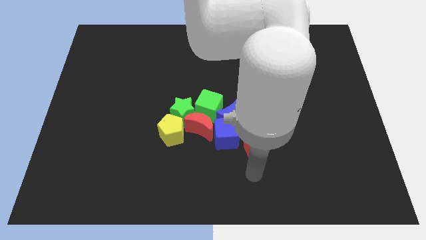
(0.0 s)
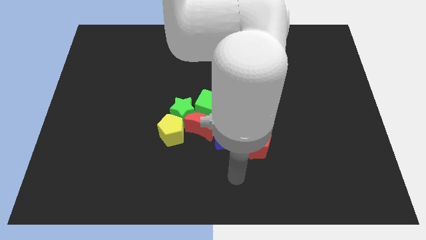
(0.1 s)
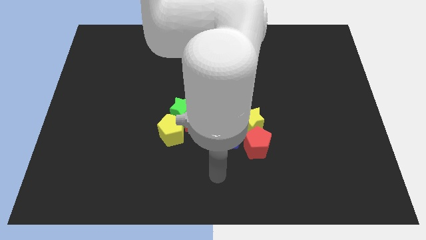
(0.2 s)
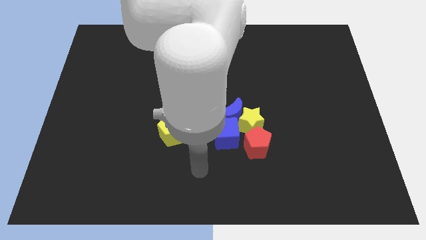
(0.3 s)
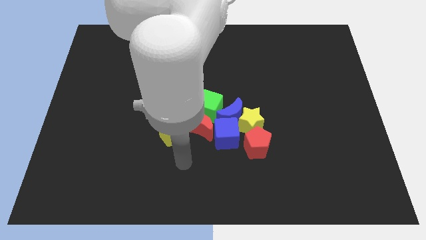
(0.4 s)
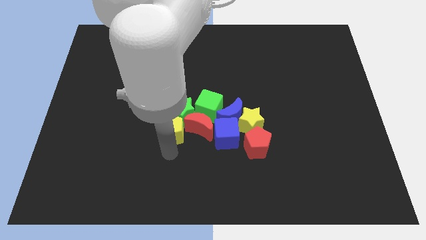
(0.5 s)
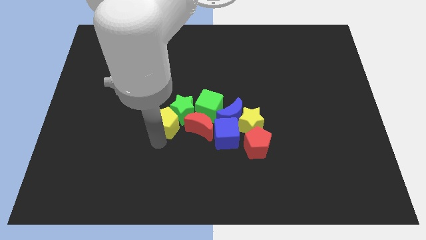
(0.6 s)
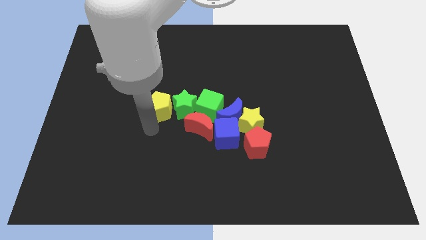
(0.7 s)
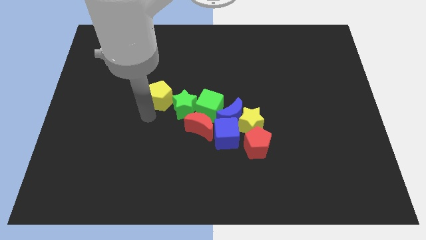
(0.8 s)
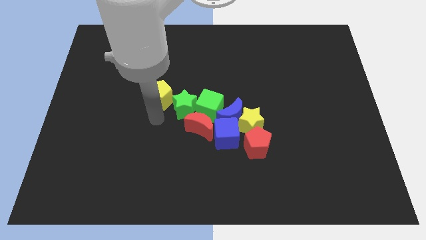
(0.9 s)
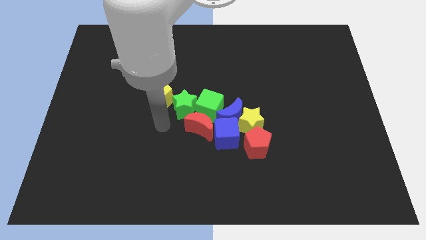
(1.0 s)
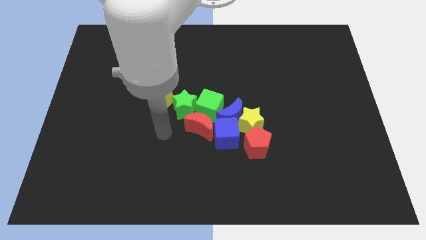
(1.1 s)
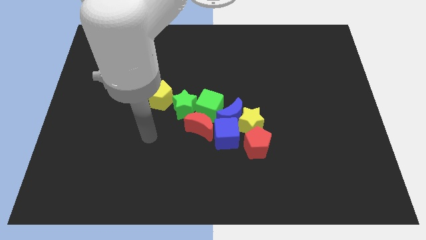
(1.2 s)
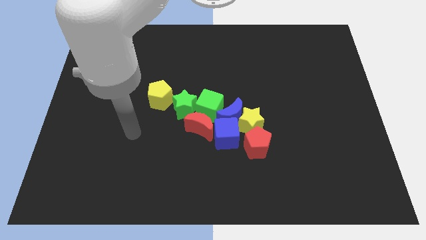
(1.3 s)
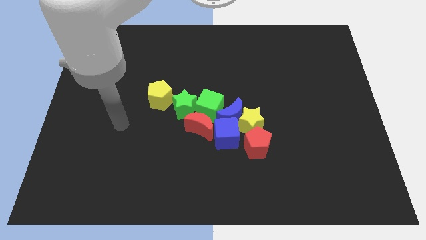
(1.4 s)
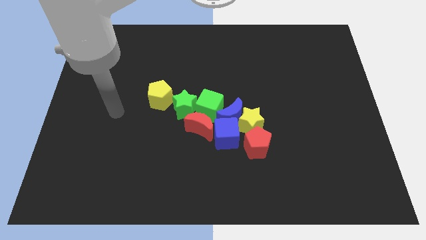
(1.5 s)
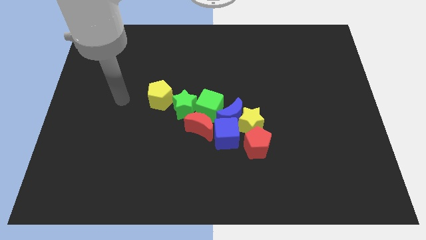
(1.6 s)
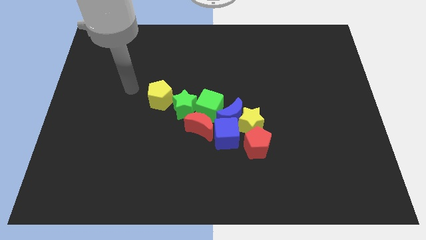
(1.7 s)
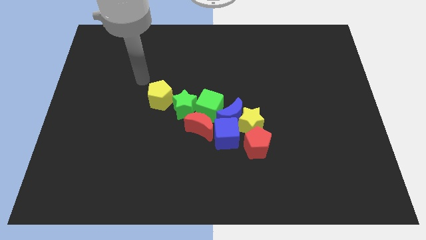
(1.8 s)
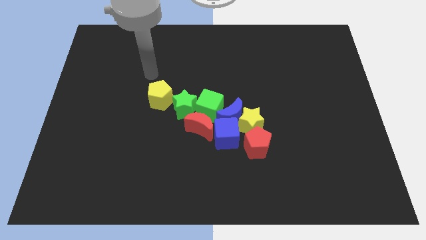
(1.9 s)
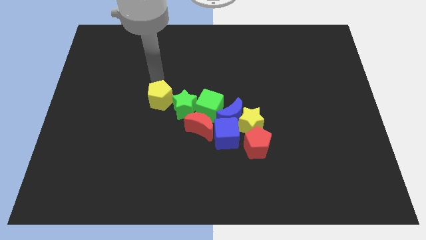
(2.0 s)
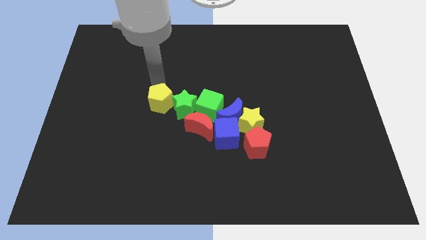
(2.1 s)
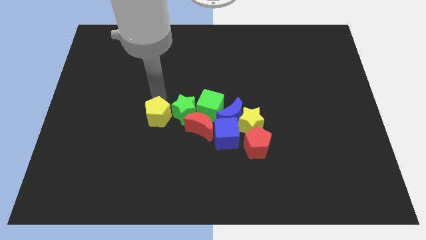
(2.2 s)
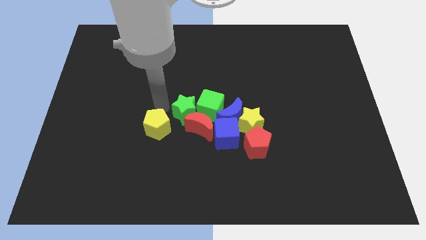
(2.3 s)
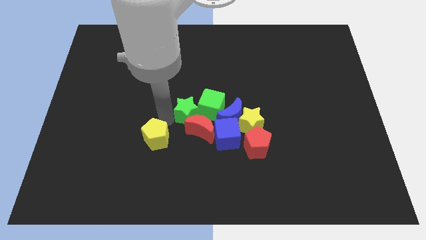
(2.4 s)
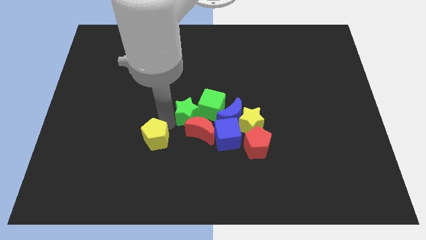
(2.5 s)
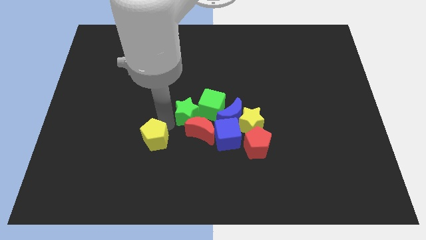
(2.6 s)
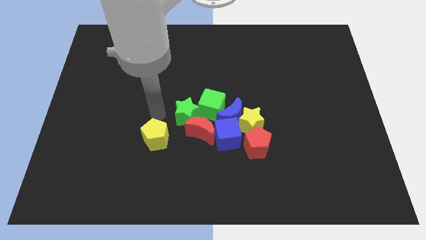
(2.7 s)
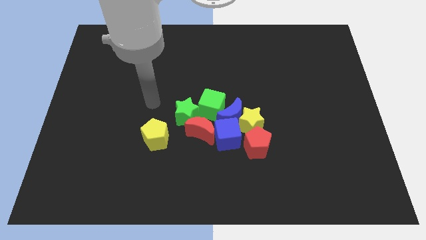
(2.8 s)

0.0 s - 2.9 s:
separate the yellow pentagon from the group of blocks

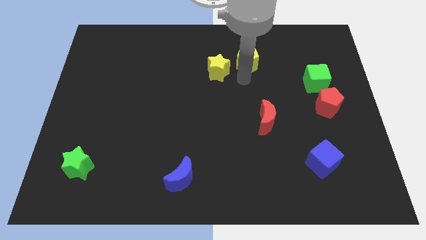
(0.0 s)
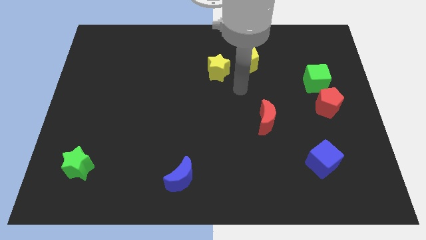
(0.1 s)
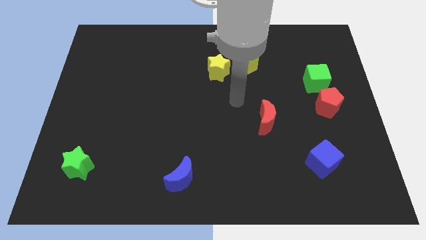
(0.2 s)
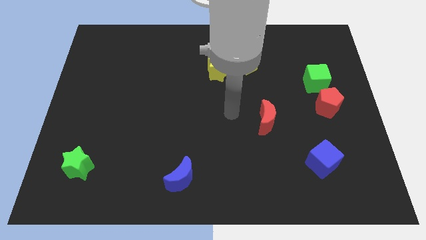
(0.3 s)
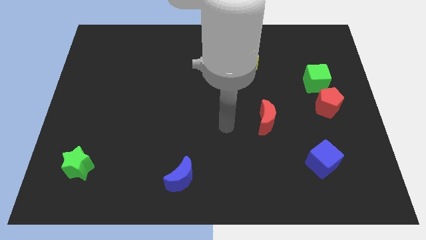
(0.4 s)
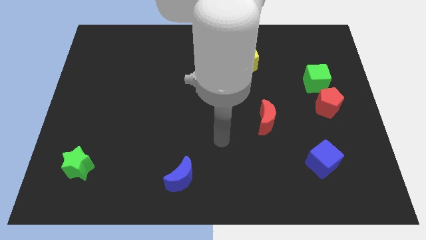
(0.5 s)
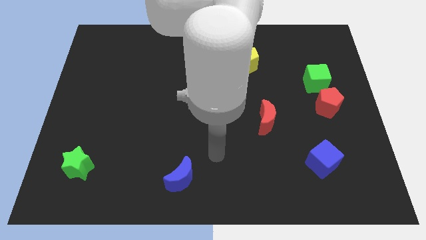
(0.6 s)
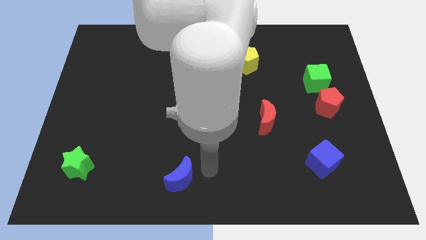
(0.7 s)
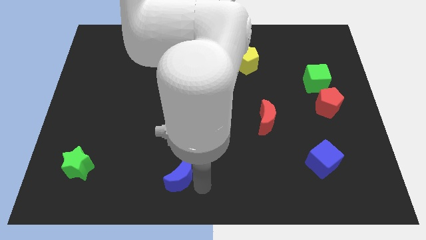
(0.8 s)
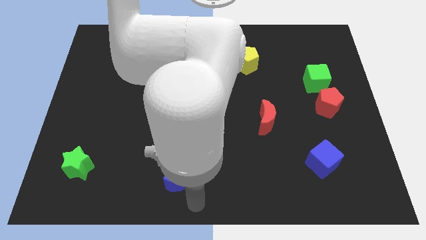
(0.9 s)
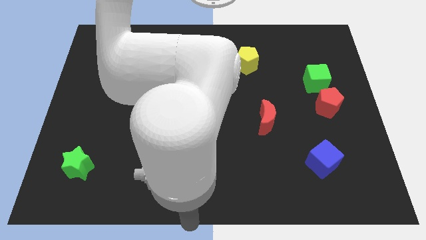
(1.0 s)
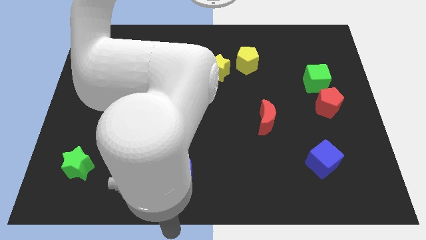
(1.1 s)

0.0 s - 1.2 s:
move your arm to the bottom of the blue crescent

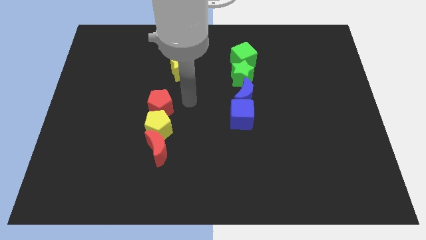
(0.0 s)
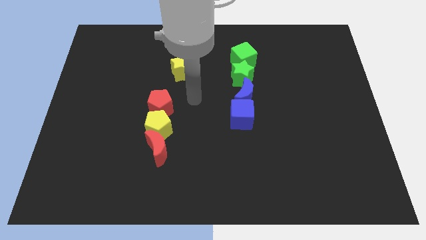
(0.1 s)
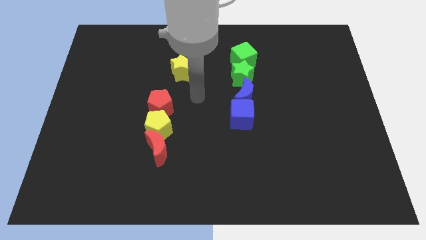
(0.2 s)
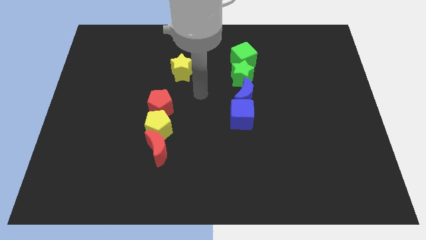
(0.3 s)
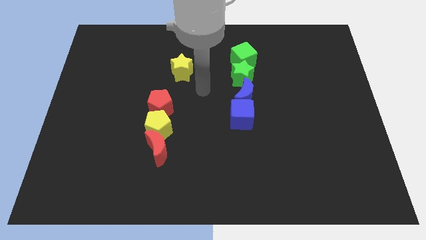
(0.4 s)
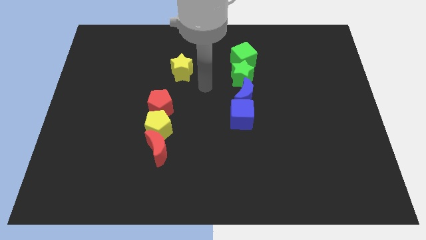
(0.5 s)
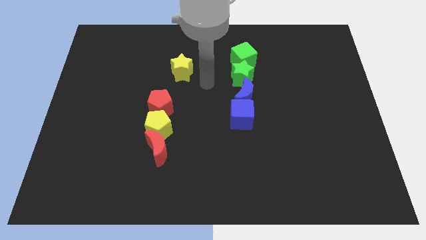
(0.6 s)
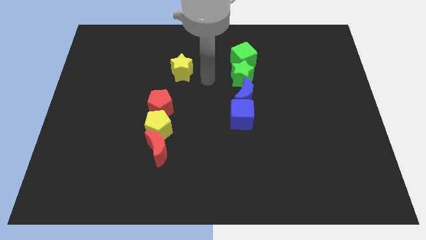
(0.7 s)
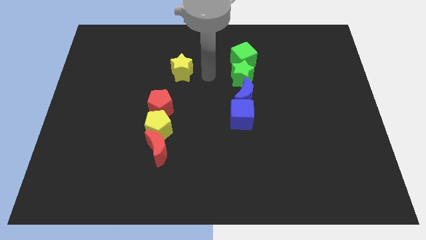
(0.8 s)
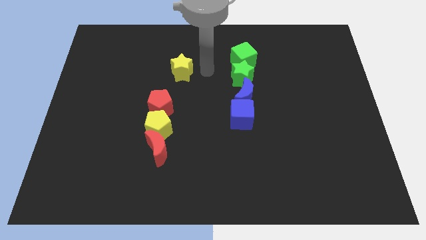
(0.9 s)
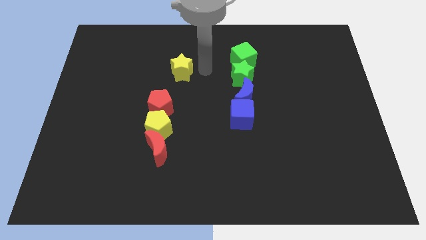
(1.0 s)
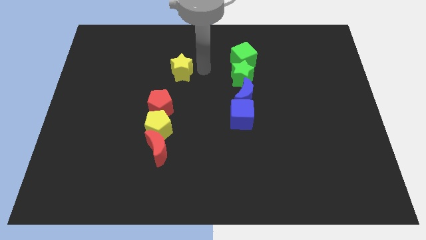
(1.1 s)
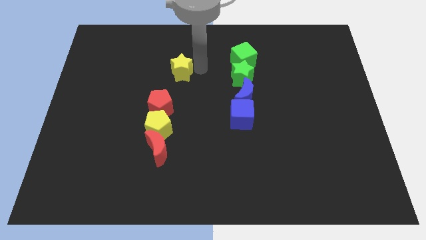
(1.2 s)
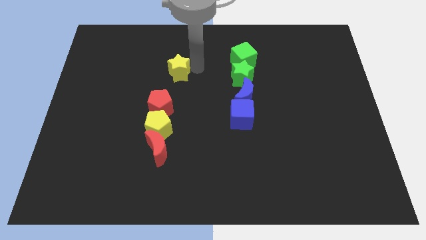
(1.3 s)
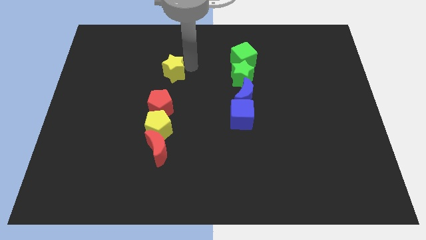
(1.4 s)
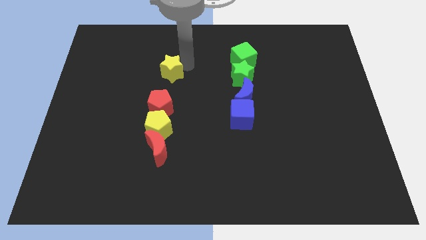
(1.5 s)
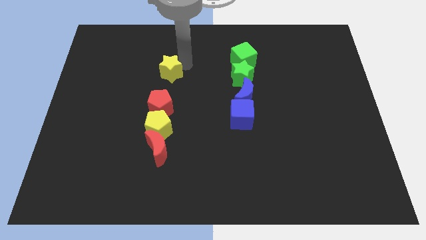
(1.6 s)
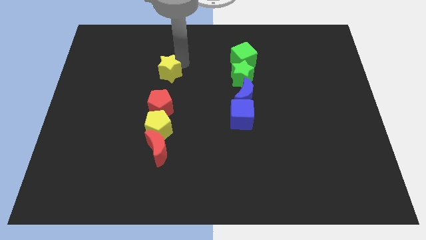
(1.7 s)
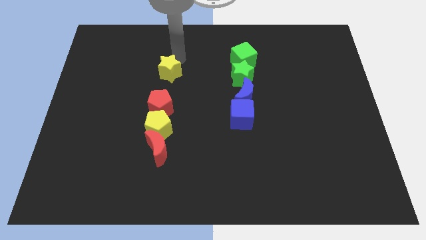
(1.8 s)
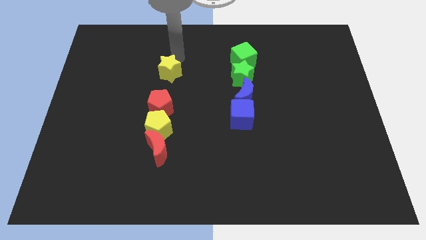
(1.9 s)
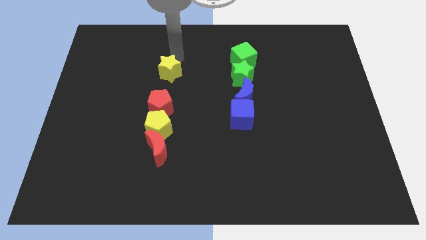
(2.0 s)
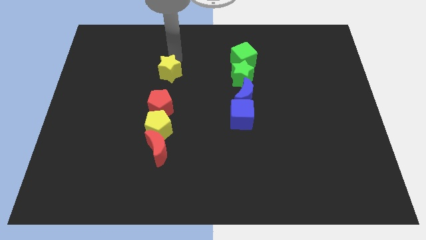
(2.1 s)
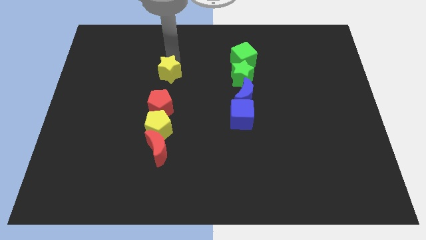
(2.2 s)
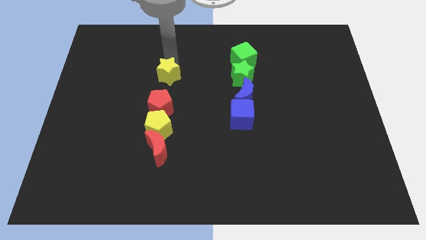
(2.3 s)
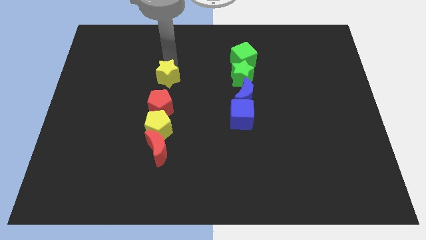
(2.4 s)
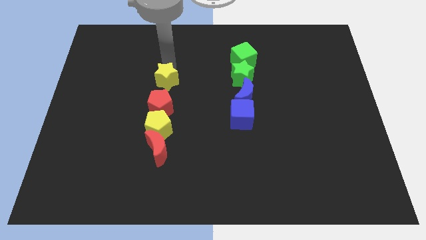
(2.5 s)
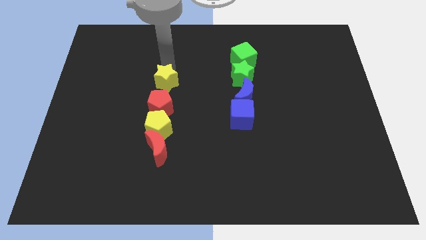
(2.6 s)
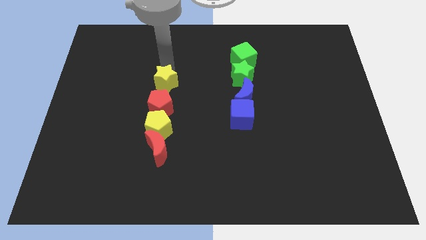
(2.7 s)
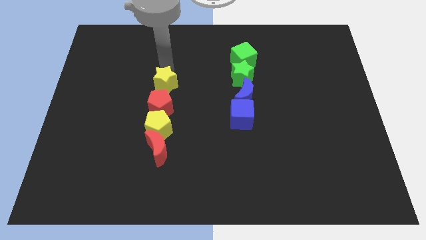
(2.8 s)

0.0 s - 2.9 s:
move the yellow star to top of the red pentagon

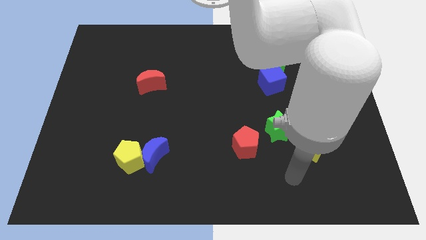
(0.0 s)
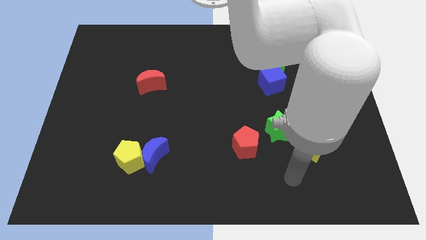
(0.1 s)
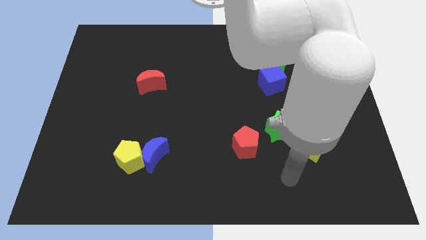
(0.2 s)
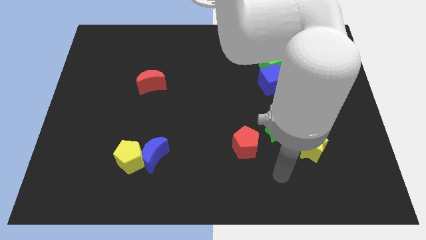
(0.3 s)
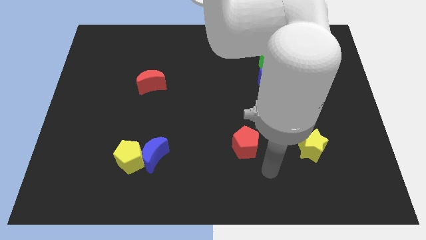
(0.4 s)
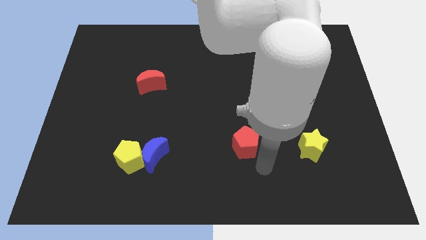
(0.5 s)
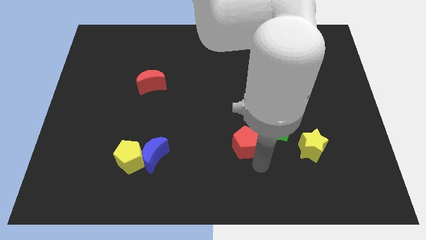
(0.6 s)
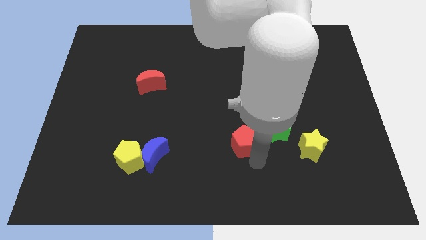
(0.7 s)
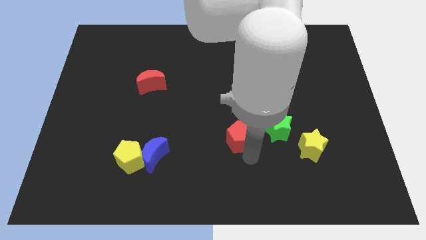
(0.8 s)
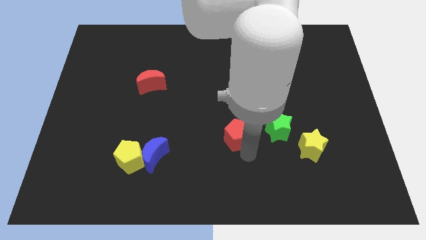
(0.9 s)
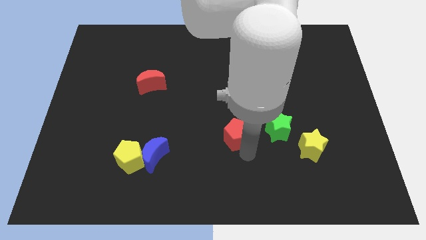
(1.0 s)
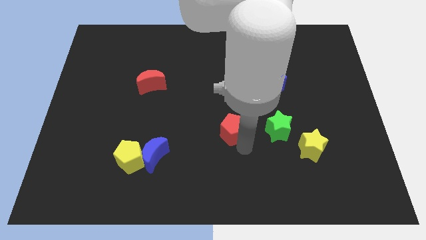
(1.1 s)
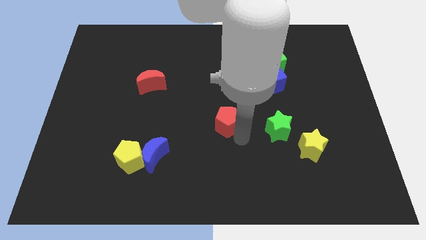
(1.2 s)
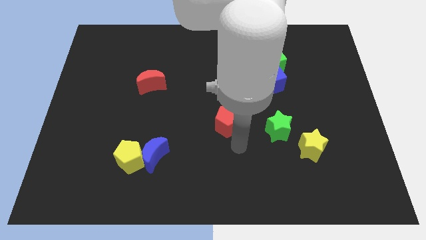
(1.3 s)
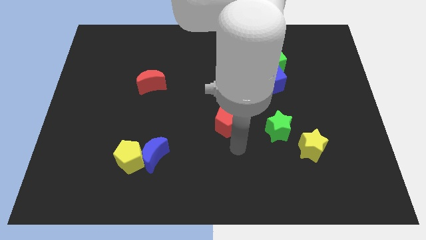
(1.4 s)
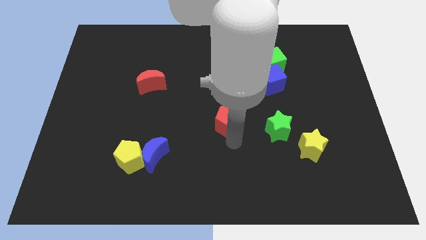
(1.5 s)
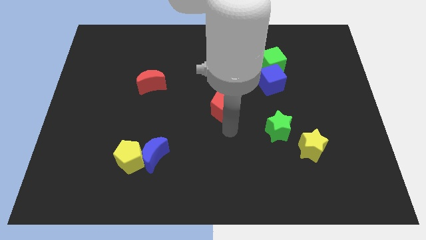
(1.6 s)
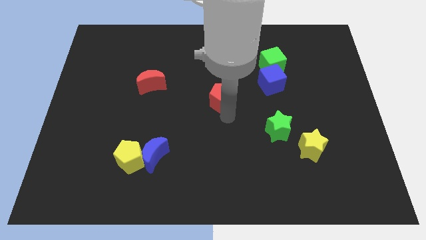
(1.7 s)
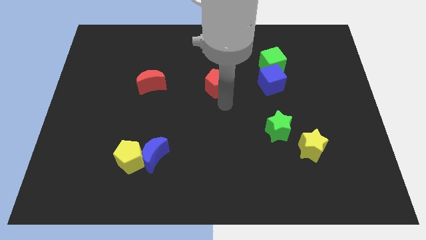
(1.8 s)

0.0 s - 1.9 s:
slide the red pentagon towards top

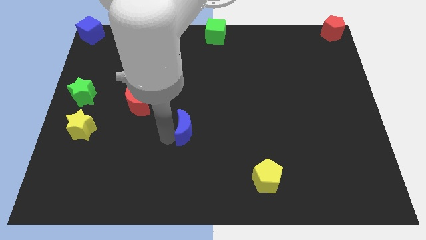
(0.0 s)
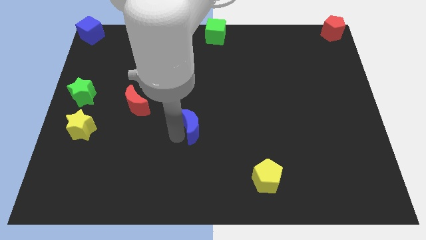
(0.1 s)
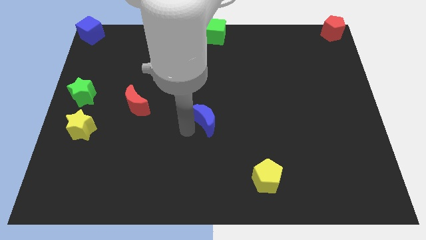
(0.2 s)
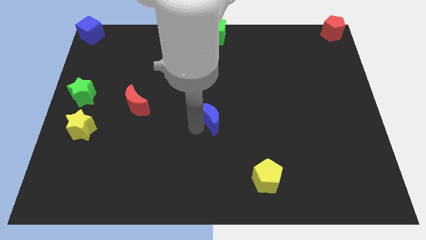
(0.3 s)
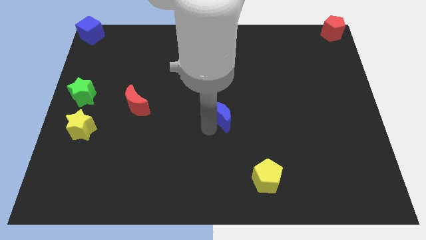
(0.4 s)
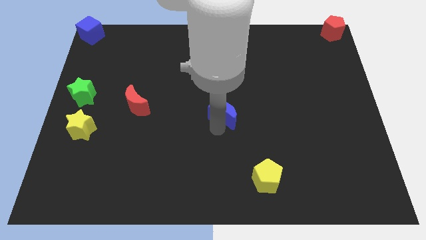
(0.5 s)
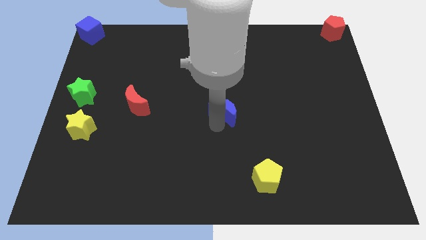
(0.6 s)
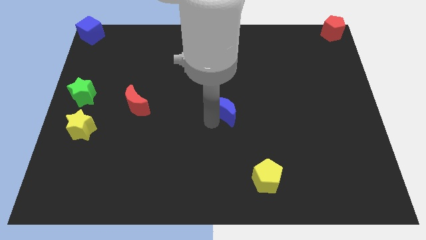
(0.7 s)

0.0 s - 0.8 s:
place the blue crescent at the center of the board
